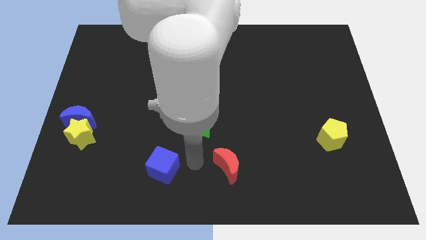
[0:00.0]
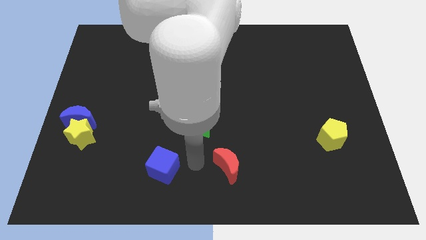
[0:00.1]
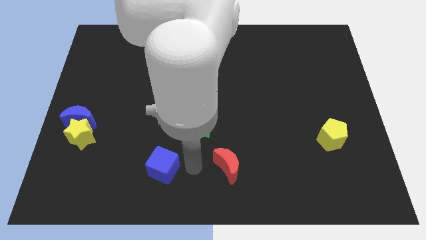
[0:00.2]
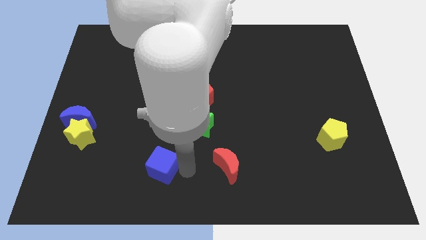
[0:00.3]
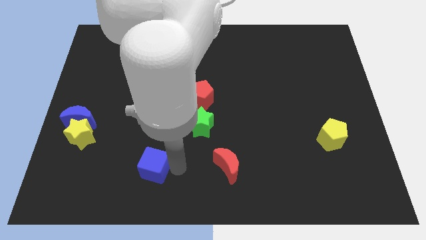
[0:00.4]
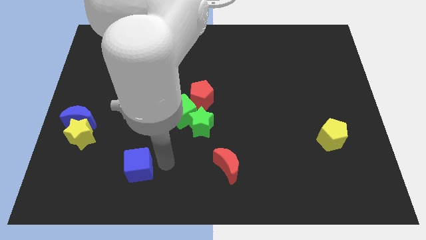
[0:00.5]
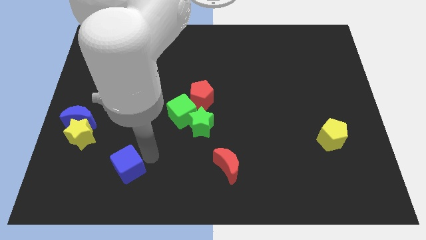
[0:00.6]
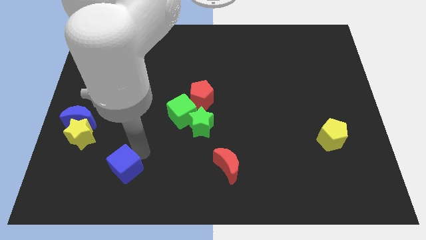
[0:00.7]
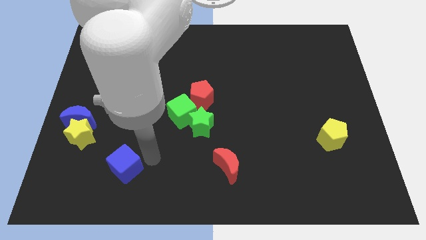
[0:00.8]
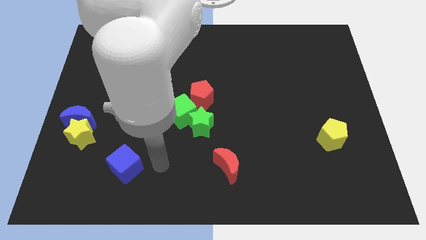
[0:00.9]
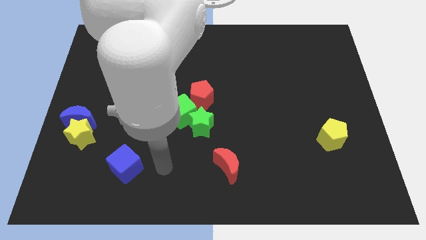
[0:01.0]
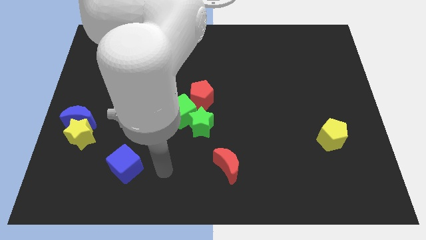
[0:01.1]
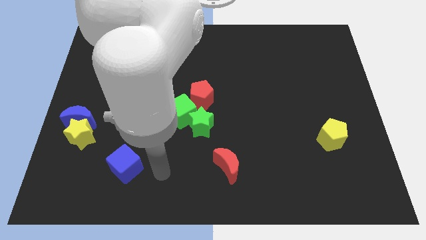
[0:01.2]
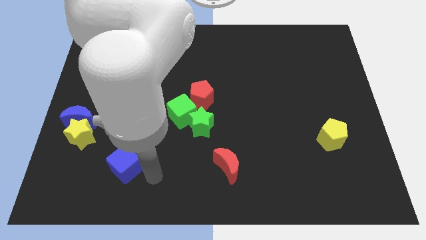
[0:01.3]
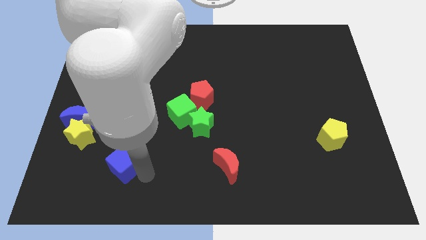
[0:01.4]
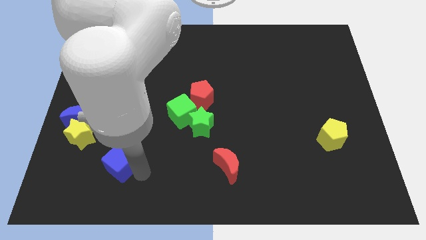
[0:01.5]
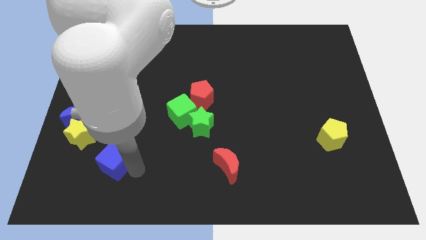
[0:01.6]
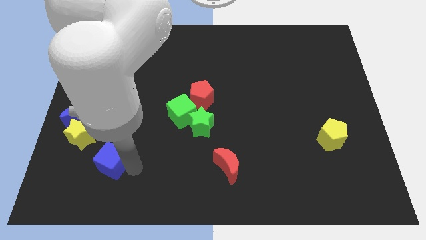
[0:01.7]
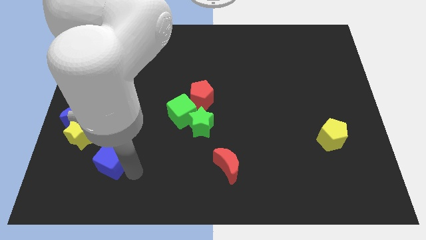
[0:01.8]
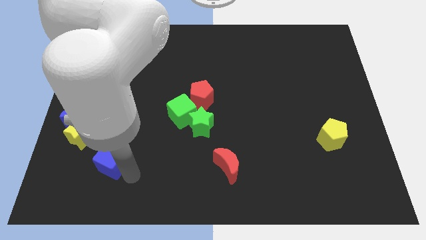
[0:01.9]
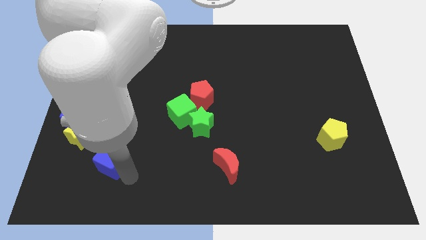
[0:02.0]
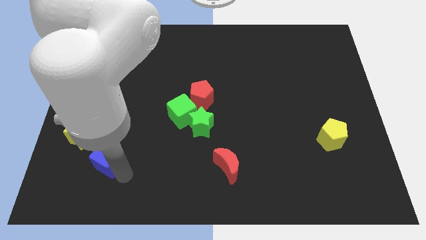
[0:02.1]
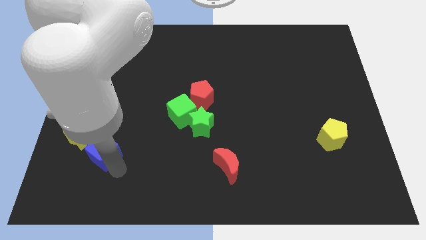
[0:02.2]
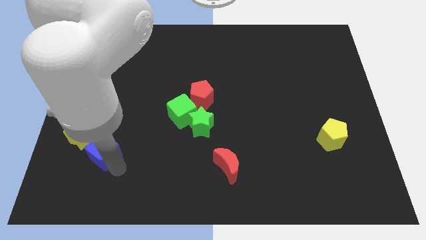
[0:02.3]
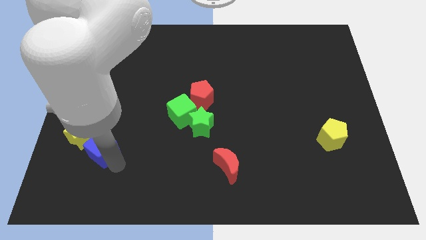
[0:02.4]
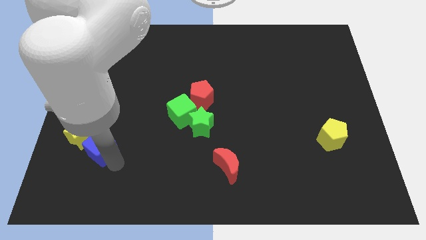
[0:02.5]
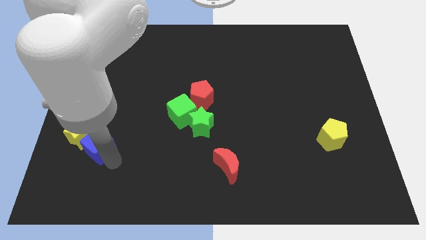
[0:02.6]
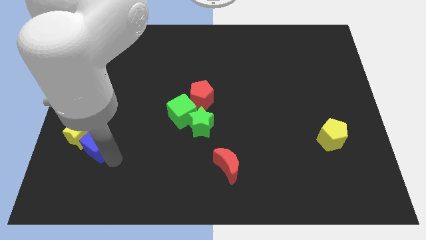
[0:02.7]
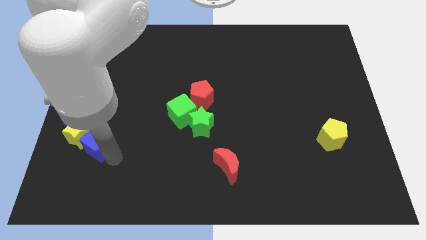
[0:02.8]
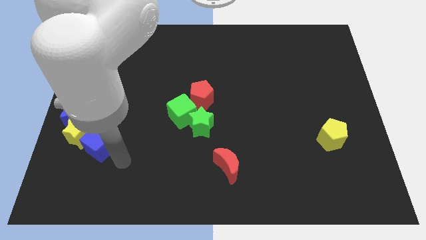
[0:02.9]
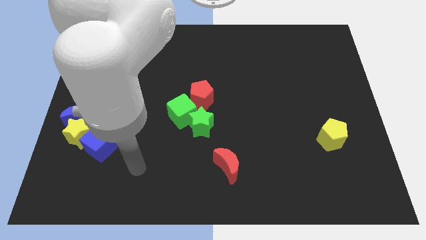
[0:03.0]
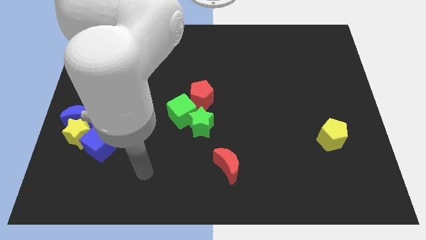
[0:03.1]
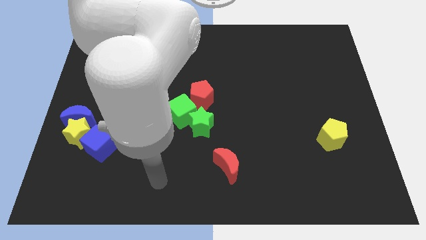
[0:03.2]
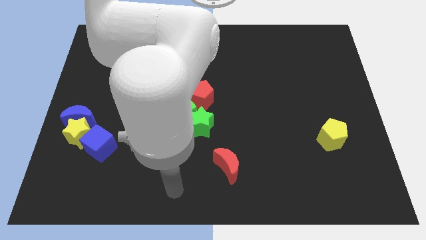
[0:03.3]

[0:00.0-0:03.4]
move the blue cube into the yellow star

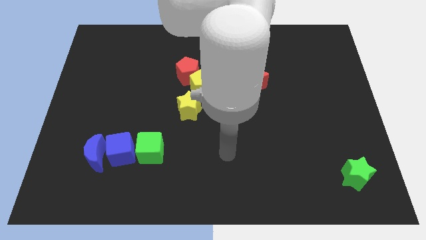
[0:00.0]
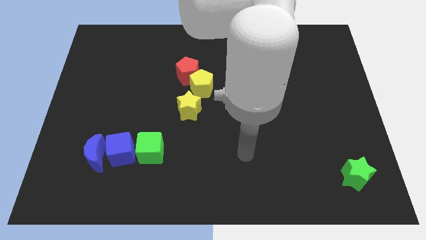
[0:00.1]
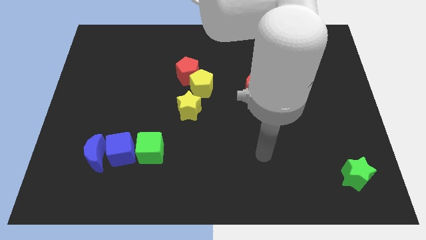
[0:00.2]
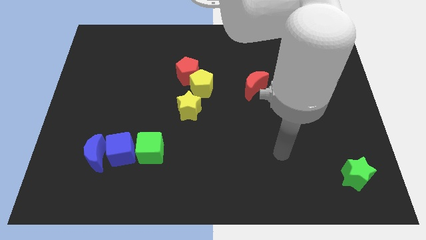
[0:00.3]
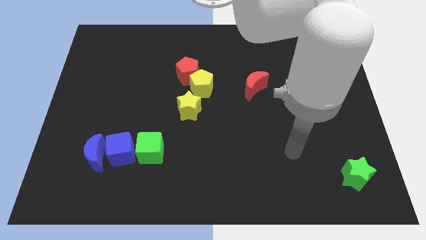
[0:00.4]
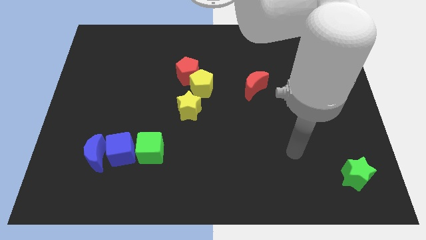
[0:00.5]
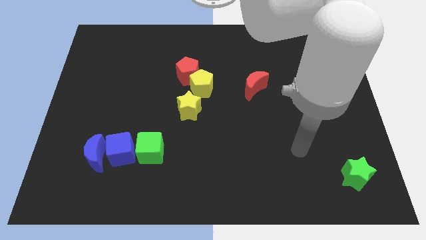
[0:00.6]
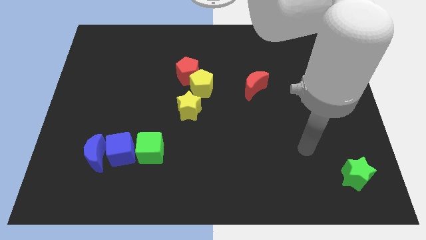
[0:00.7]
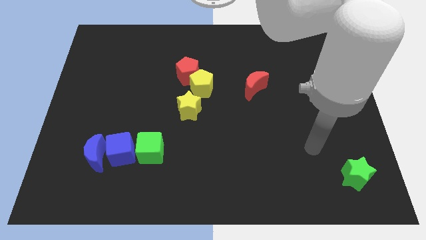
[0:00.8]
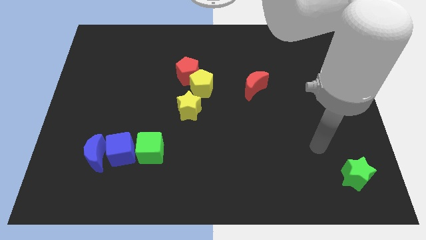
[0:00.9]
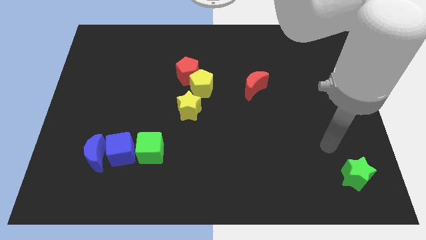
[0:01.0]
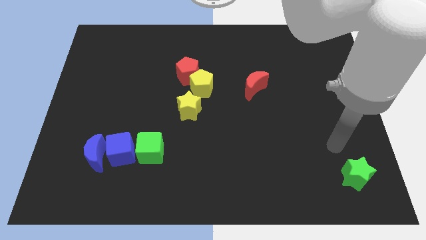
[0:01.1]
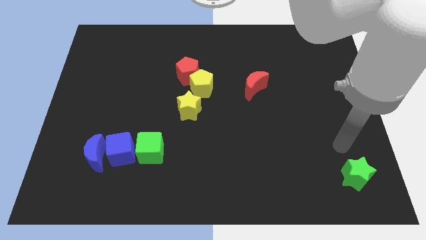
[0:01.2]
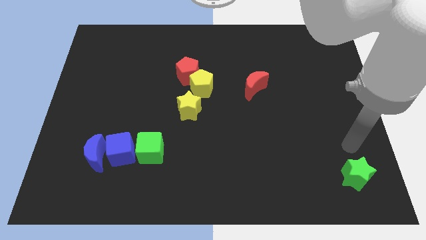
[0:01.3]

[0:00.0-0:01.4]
place your arm to the top of green star

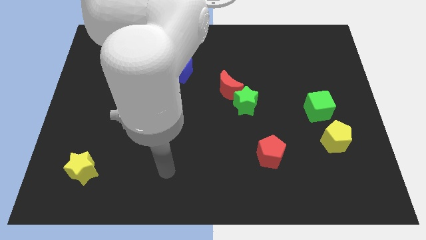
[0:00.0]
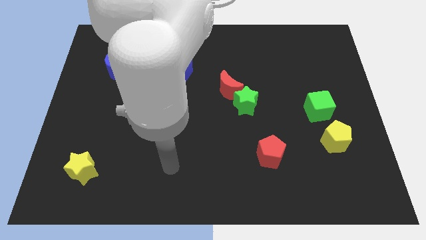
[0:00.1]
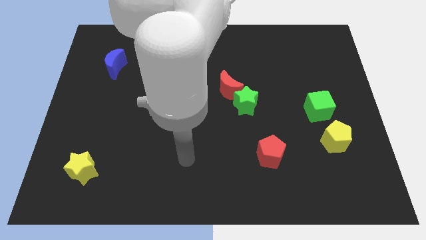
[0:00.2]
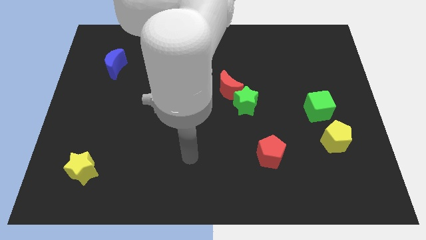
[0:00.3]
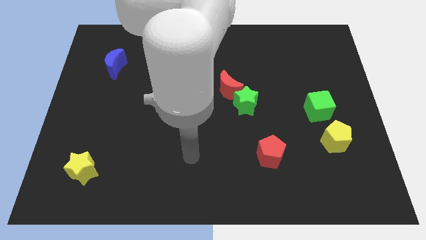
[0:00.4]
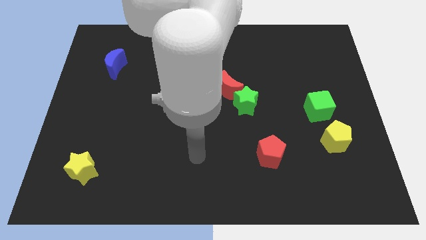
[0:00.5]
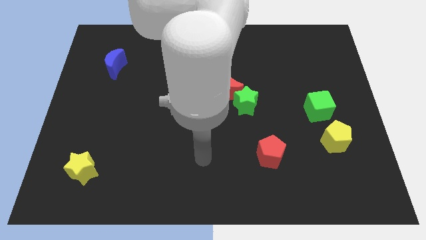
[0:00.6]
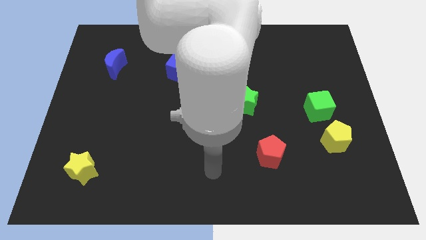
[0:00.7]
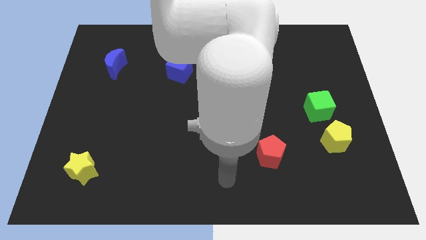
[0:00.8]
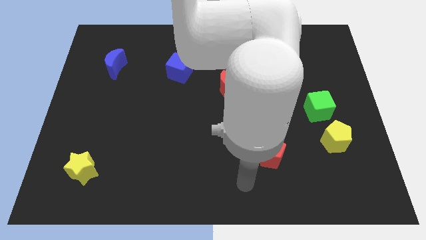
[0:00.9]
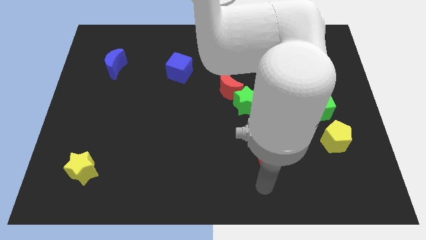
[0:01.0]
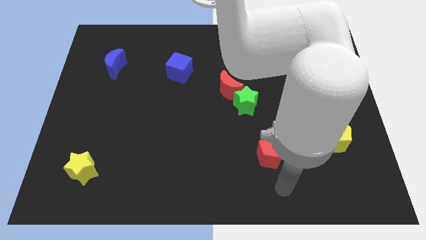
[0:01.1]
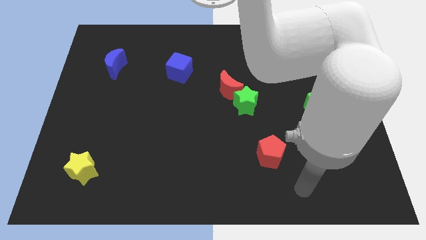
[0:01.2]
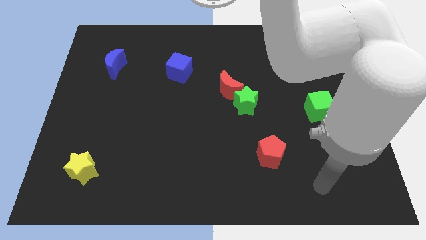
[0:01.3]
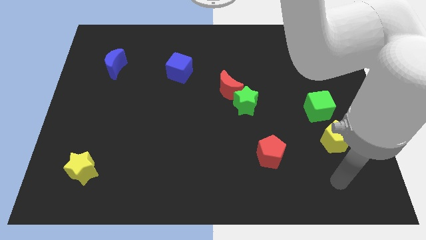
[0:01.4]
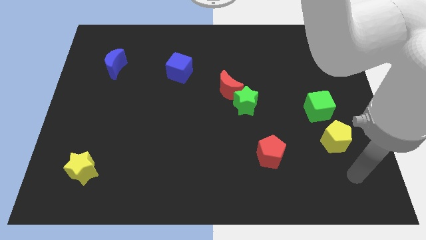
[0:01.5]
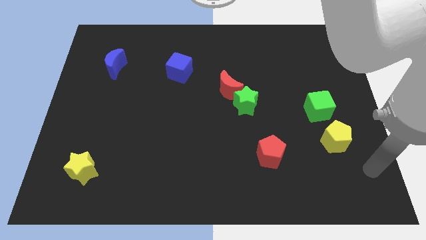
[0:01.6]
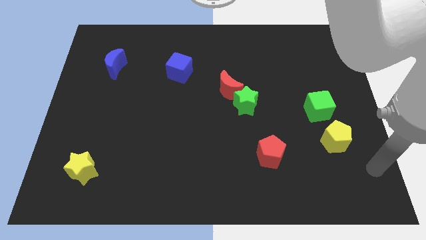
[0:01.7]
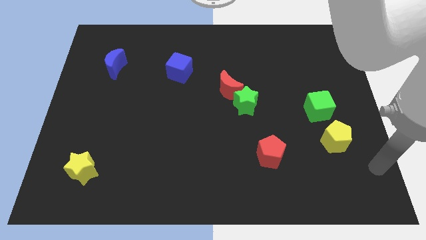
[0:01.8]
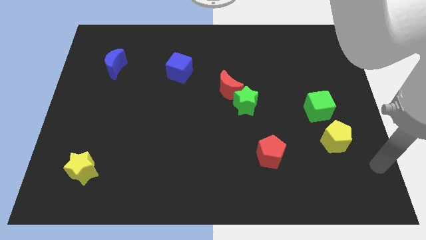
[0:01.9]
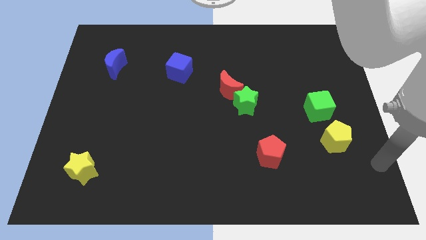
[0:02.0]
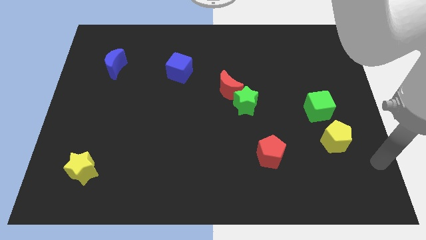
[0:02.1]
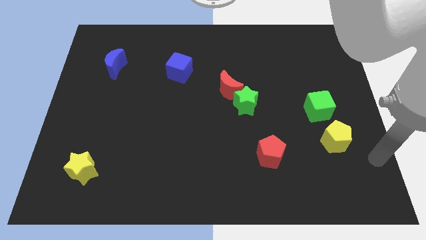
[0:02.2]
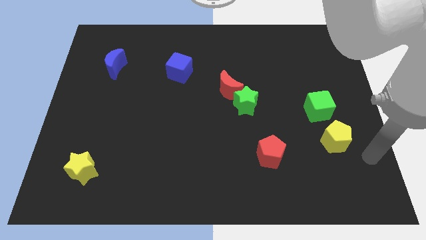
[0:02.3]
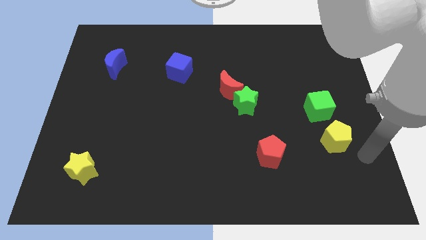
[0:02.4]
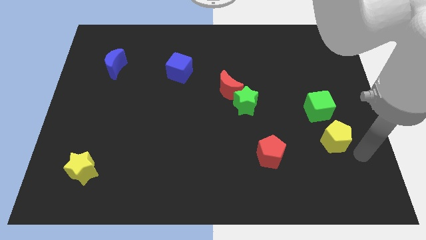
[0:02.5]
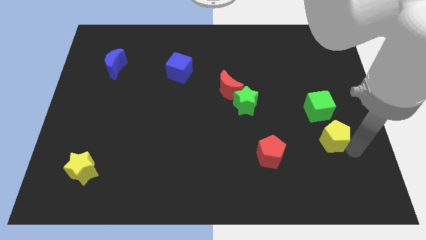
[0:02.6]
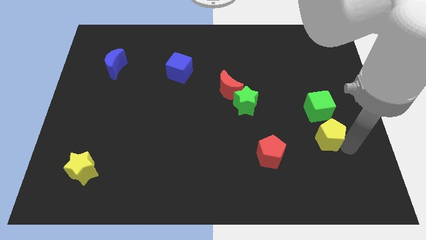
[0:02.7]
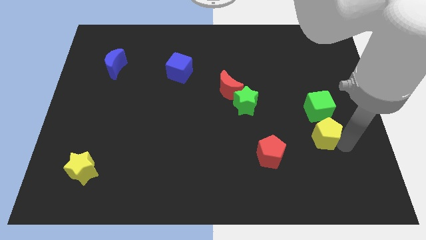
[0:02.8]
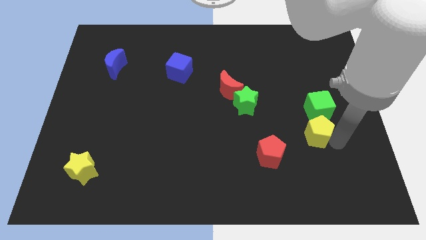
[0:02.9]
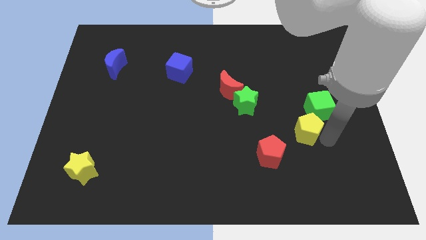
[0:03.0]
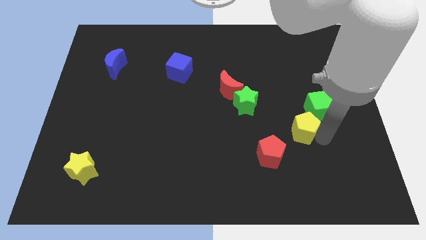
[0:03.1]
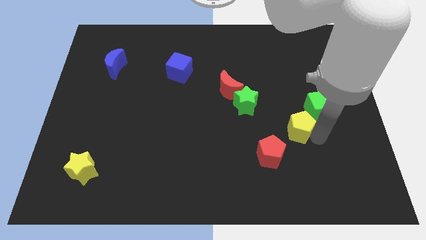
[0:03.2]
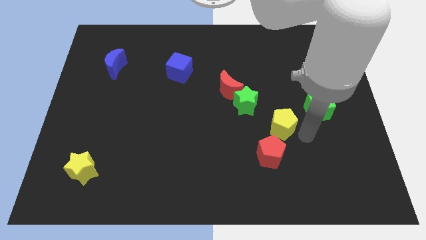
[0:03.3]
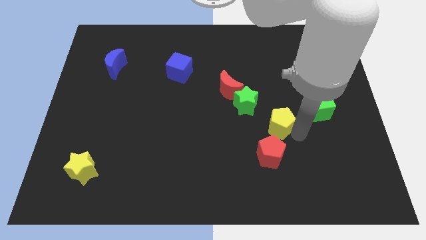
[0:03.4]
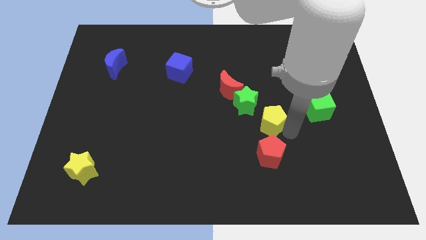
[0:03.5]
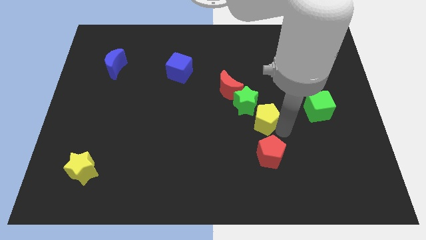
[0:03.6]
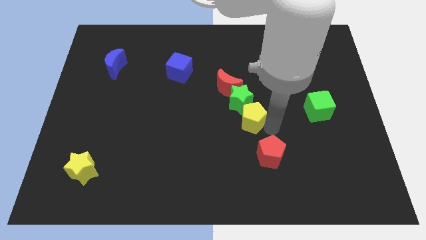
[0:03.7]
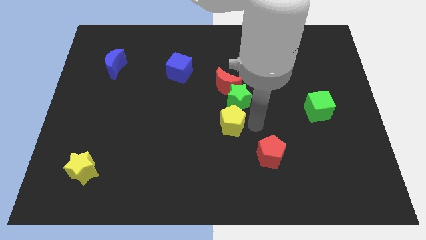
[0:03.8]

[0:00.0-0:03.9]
drag the yellow pentagon close to the green star

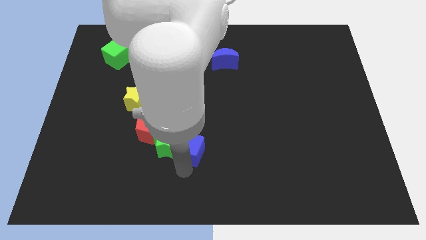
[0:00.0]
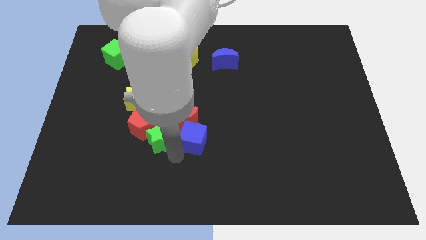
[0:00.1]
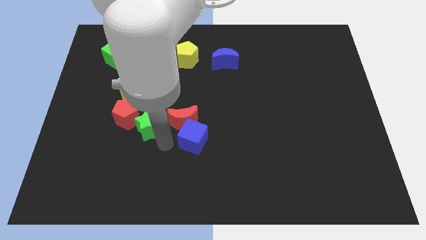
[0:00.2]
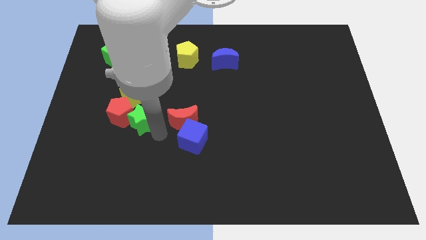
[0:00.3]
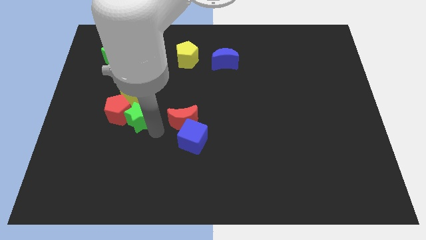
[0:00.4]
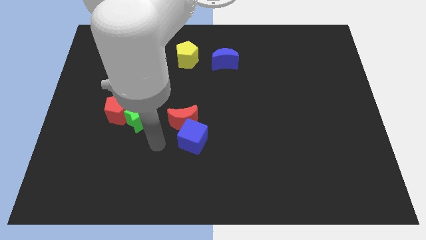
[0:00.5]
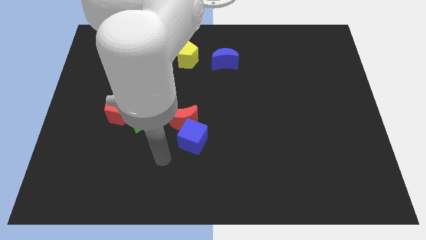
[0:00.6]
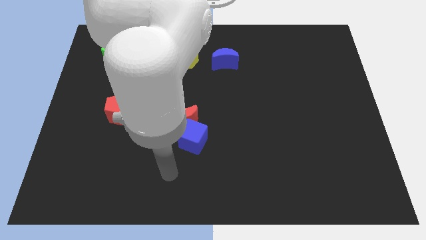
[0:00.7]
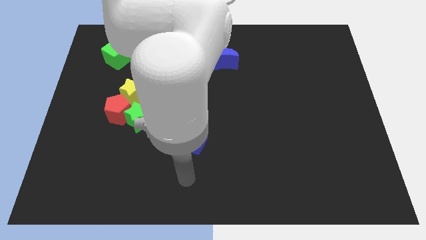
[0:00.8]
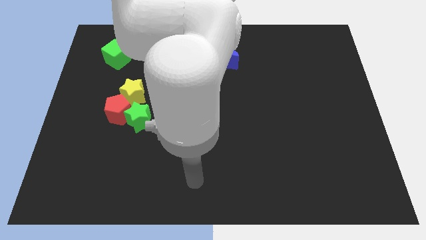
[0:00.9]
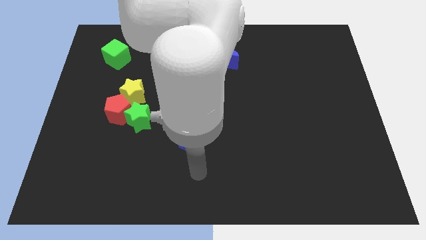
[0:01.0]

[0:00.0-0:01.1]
separate green star from the blue cube
